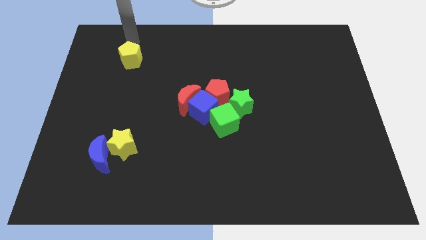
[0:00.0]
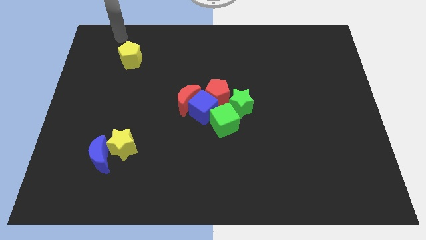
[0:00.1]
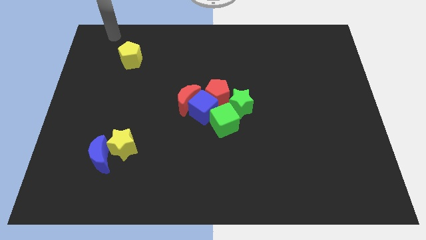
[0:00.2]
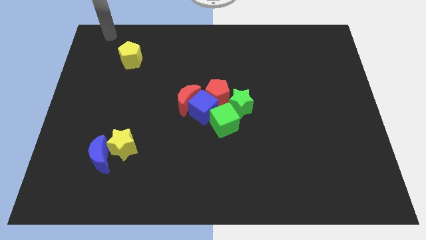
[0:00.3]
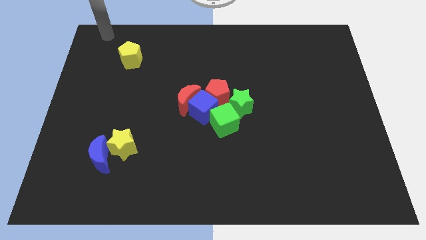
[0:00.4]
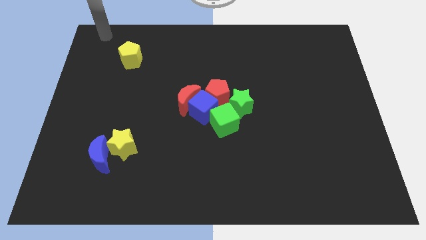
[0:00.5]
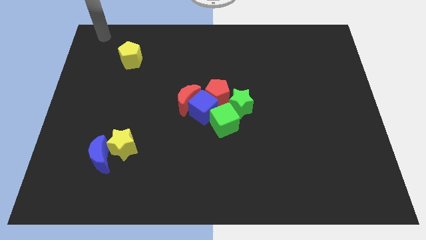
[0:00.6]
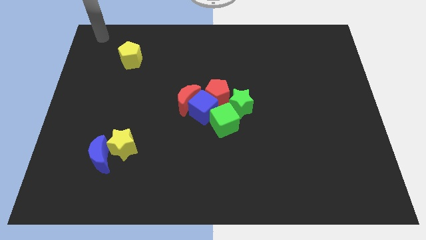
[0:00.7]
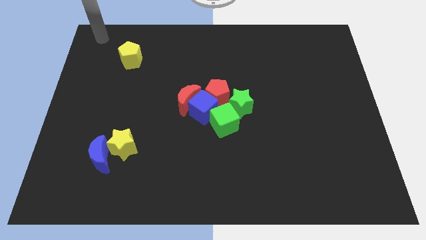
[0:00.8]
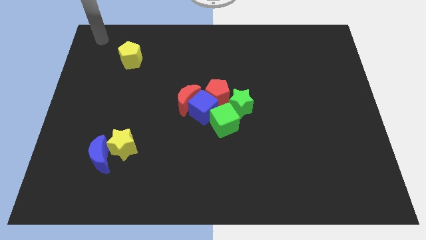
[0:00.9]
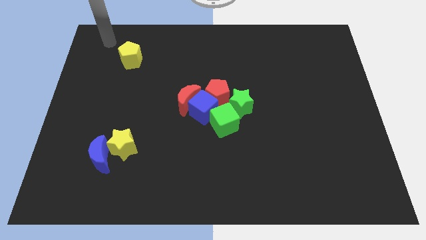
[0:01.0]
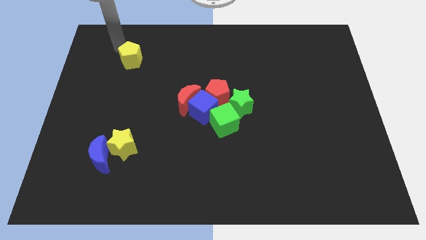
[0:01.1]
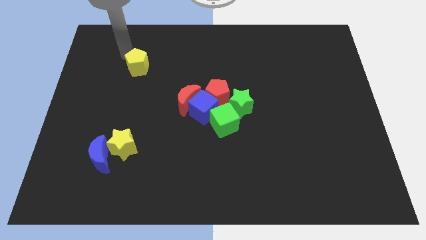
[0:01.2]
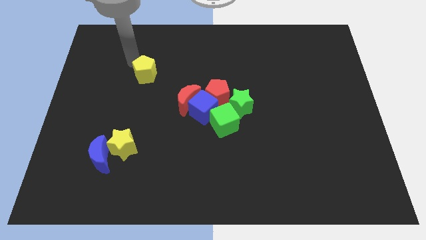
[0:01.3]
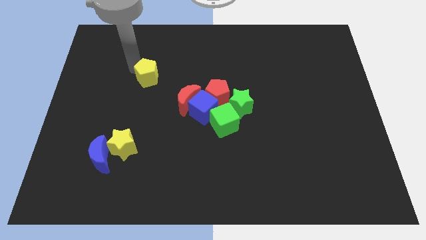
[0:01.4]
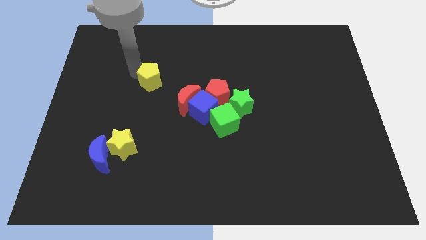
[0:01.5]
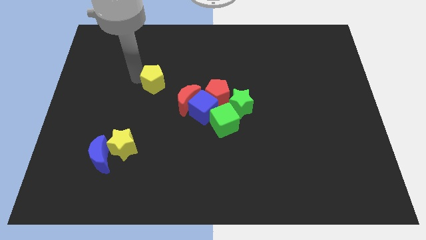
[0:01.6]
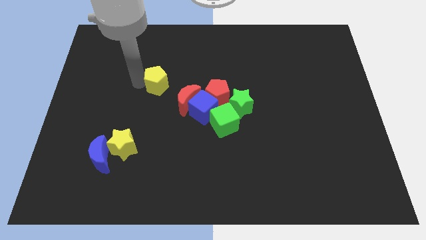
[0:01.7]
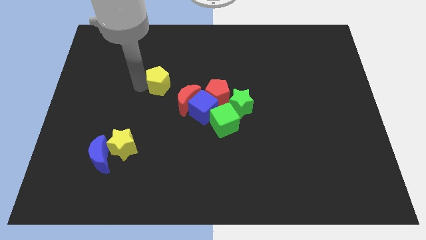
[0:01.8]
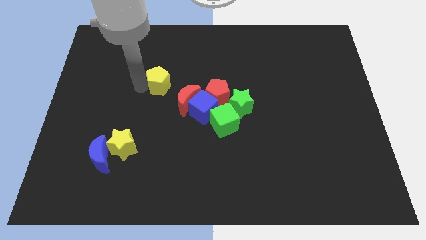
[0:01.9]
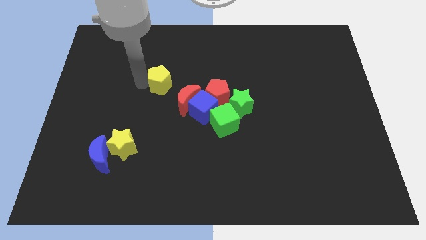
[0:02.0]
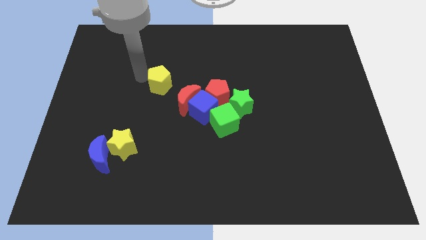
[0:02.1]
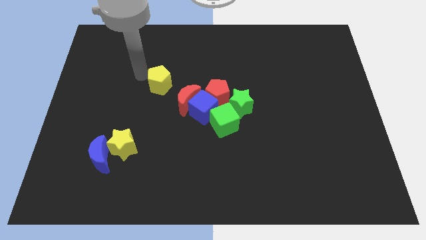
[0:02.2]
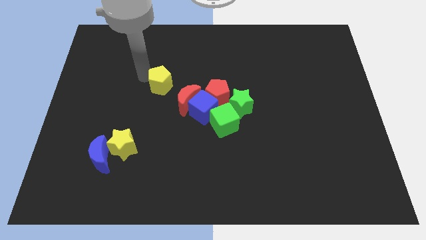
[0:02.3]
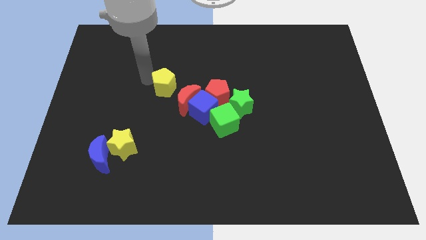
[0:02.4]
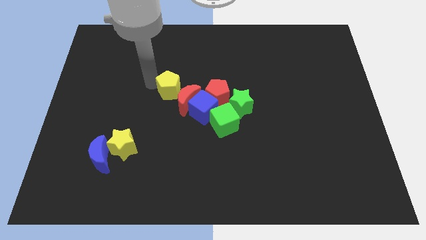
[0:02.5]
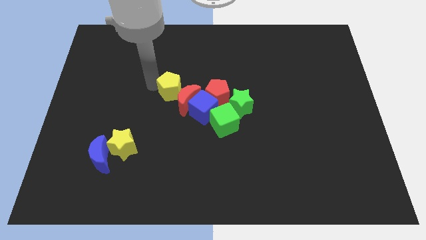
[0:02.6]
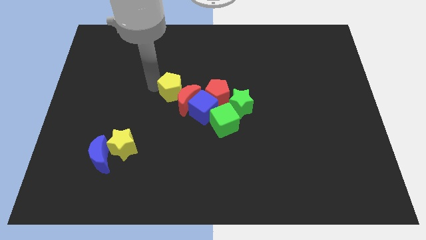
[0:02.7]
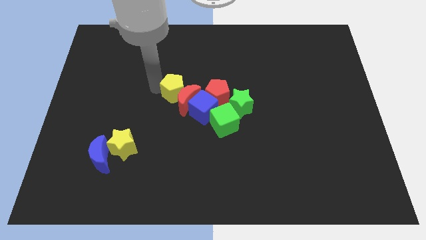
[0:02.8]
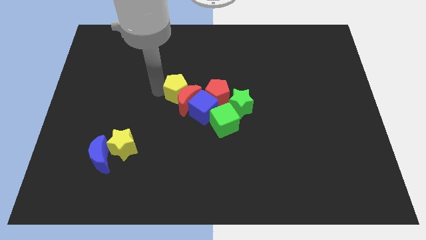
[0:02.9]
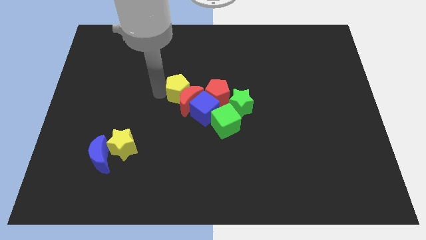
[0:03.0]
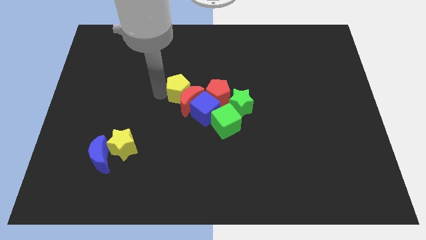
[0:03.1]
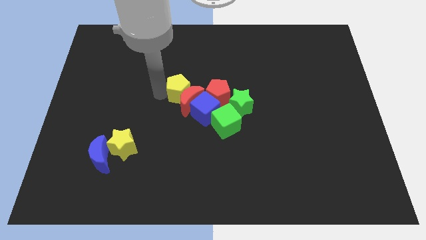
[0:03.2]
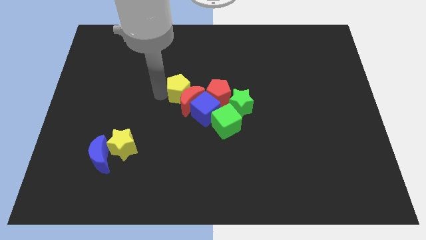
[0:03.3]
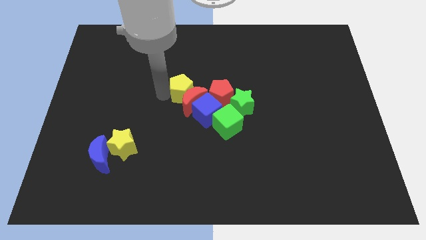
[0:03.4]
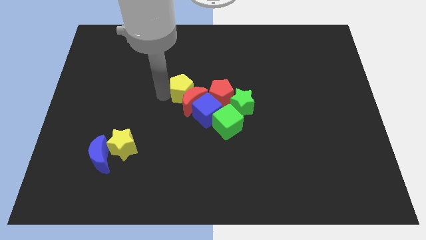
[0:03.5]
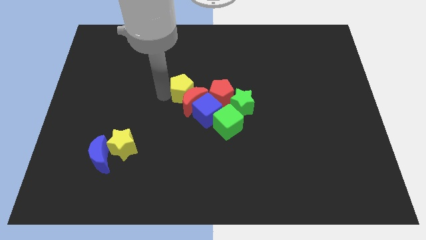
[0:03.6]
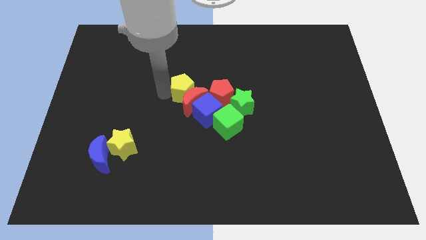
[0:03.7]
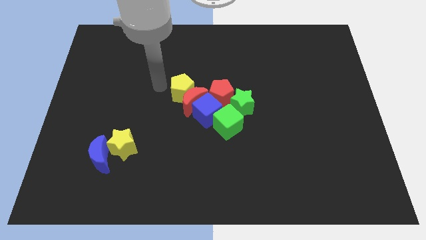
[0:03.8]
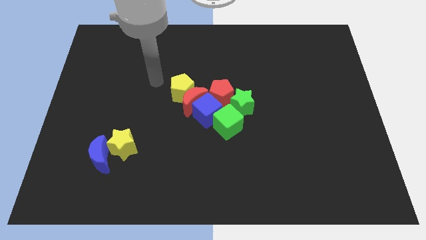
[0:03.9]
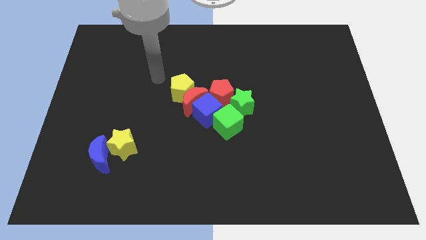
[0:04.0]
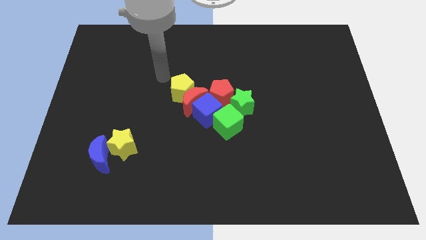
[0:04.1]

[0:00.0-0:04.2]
push the yellow pentagon to the top side of the red moon

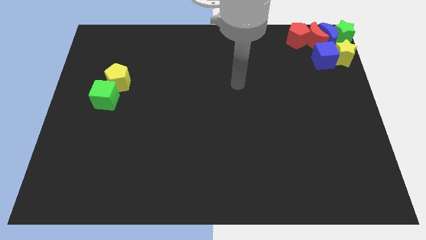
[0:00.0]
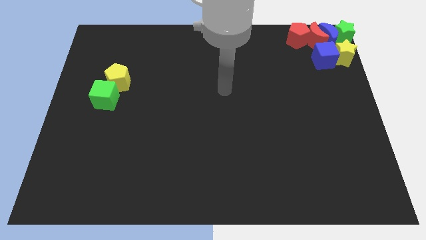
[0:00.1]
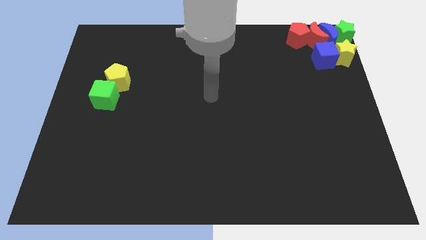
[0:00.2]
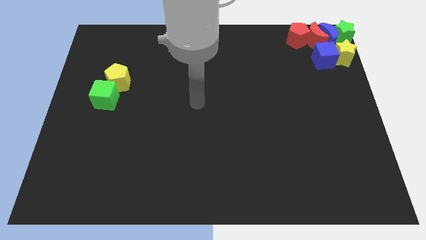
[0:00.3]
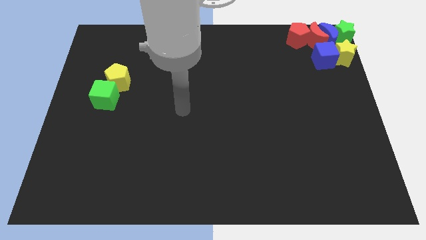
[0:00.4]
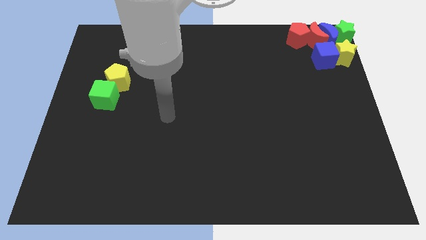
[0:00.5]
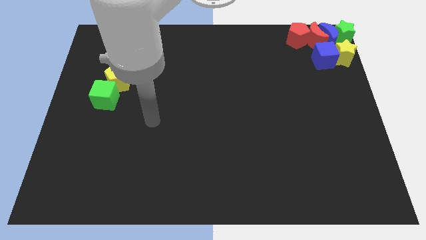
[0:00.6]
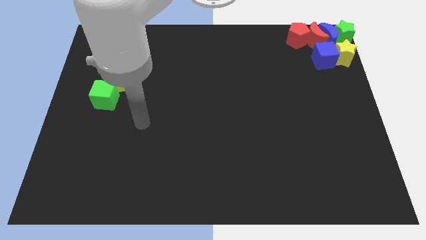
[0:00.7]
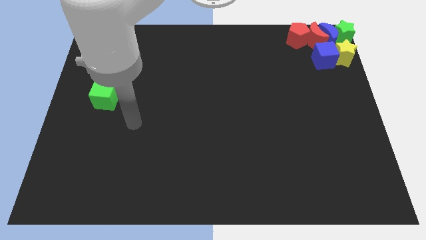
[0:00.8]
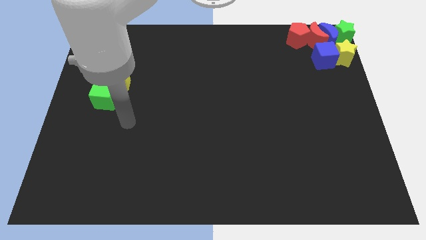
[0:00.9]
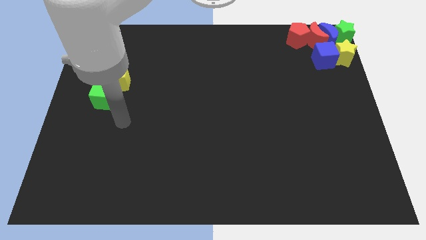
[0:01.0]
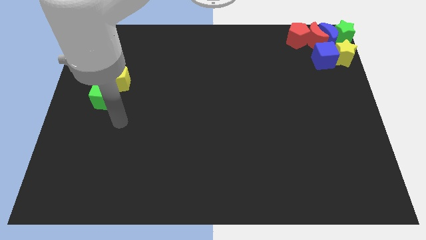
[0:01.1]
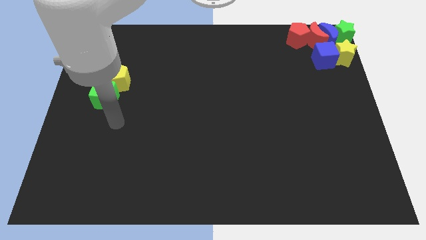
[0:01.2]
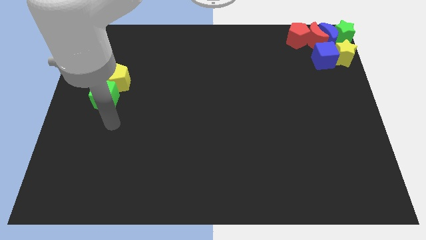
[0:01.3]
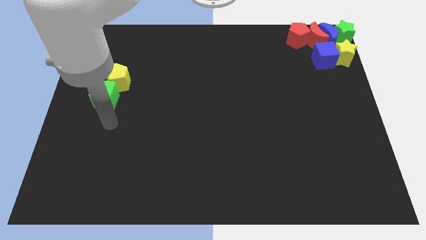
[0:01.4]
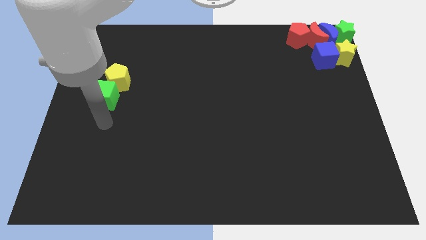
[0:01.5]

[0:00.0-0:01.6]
move the arm to the bottom of the green star

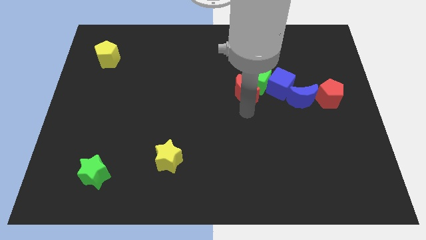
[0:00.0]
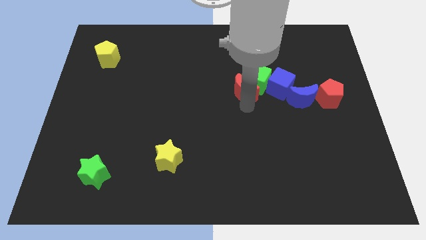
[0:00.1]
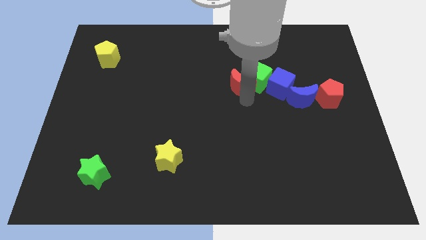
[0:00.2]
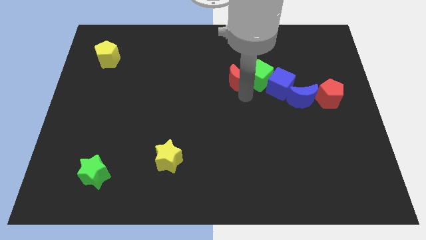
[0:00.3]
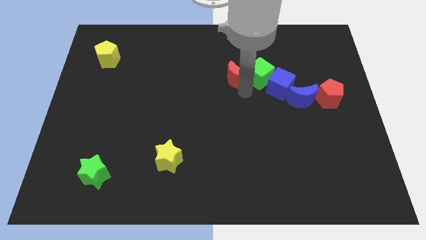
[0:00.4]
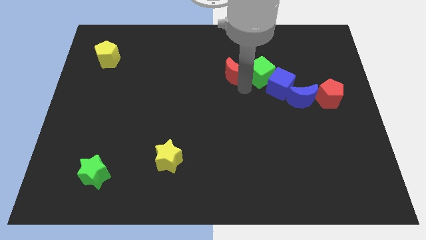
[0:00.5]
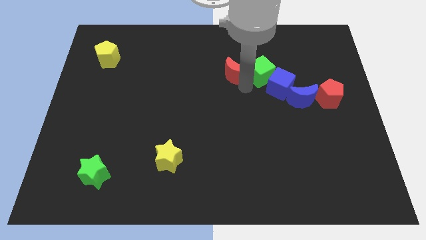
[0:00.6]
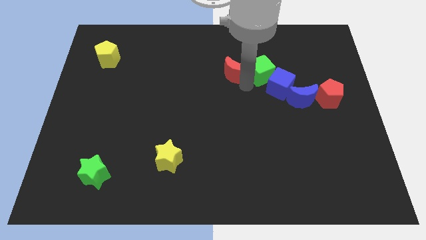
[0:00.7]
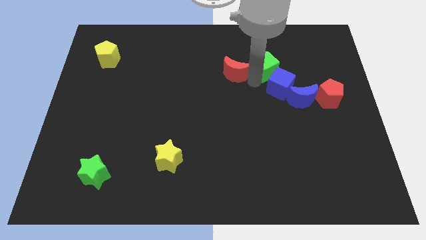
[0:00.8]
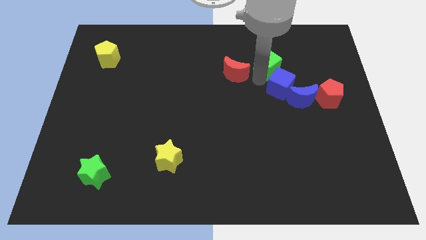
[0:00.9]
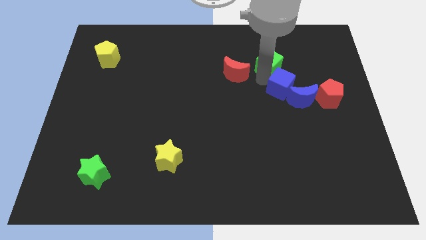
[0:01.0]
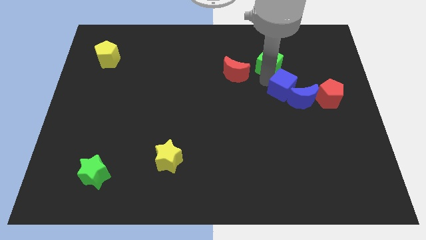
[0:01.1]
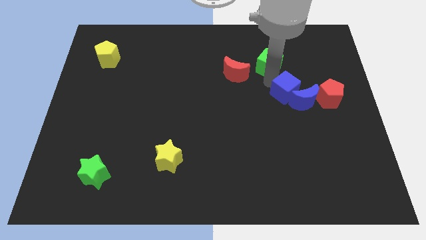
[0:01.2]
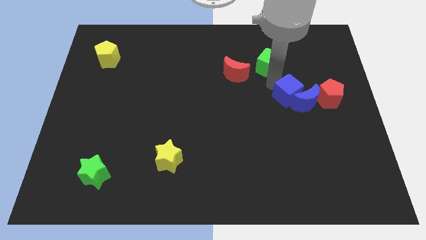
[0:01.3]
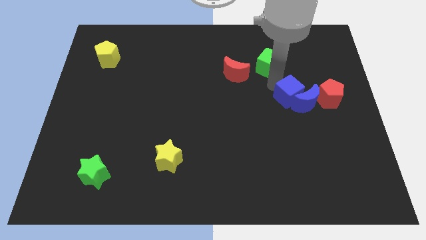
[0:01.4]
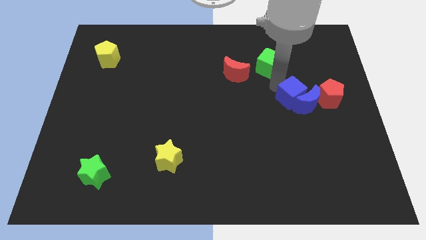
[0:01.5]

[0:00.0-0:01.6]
separate the red moon and green cube

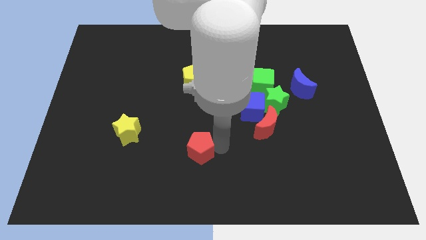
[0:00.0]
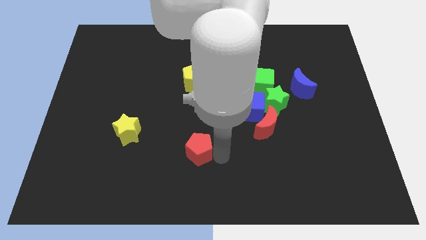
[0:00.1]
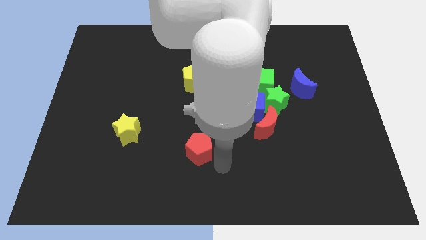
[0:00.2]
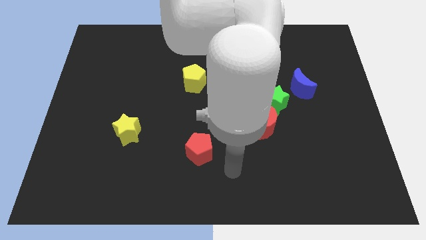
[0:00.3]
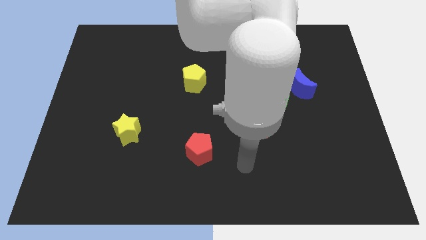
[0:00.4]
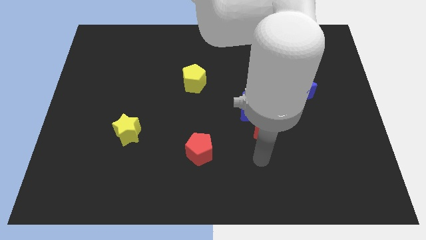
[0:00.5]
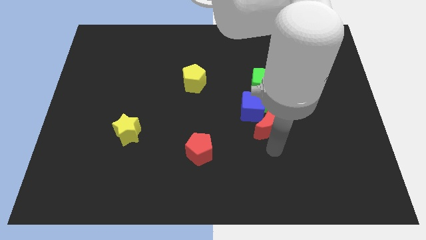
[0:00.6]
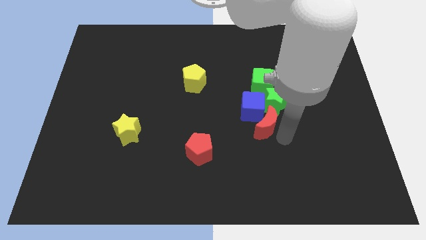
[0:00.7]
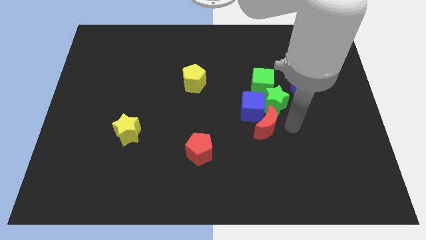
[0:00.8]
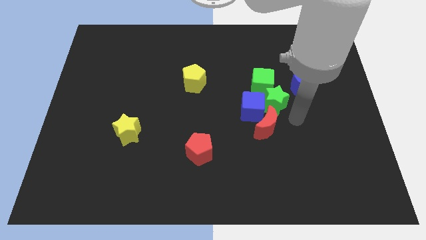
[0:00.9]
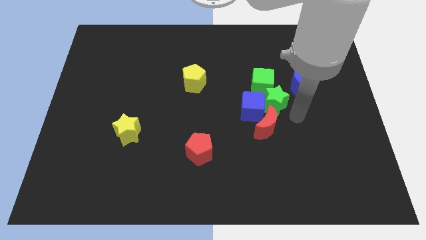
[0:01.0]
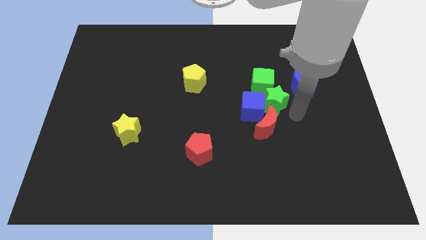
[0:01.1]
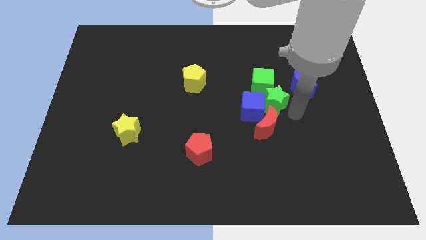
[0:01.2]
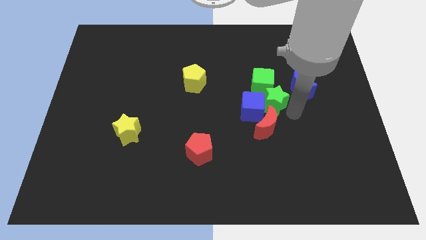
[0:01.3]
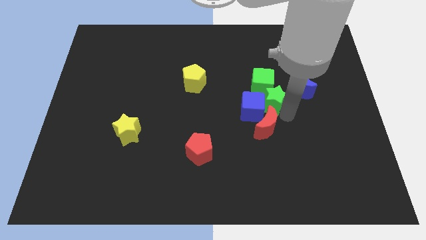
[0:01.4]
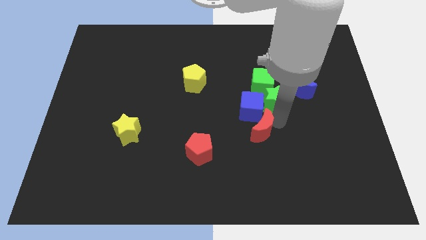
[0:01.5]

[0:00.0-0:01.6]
place arm to the right of red moon
